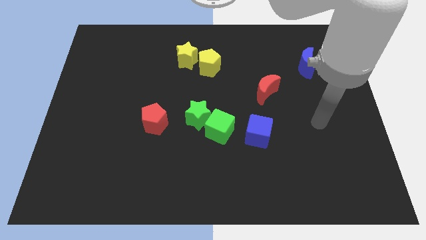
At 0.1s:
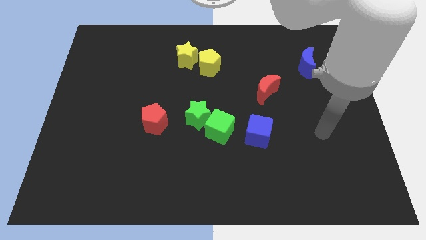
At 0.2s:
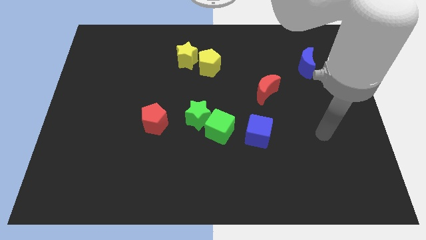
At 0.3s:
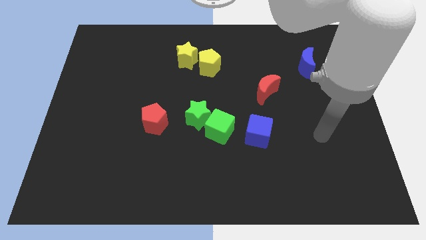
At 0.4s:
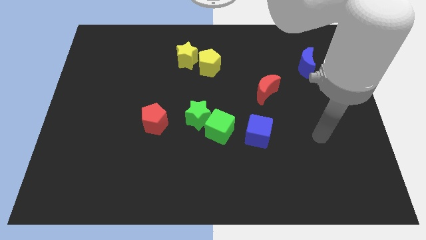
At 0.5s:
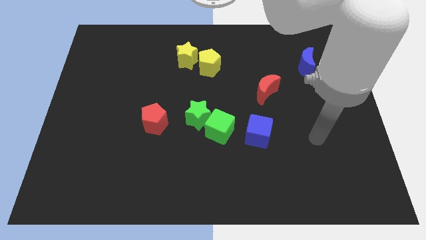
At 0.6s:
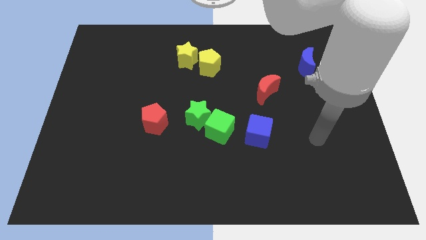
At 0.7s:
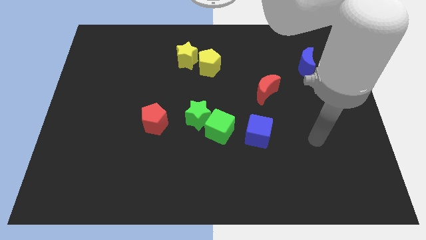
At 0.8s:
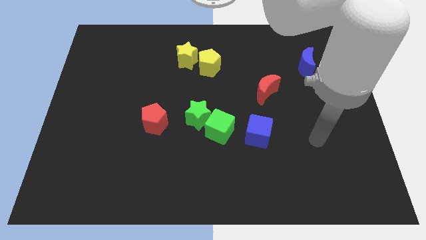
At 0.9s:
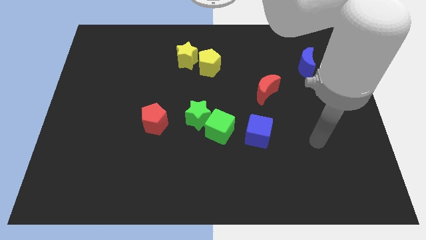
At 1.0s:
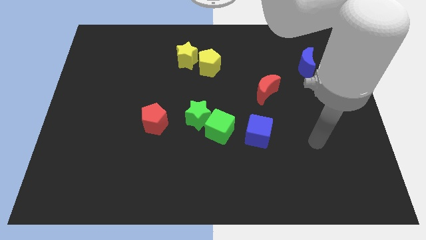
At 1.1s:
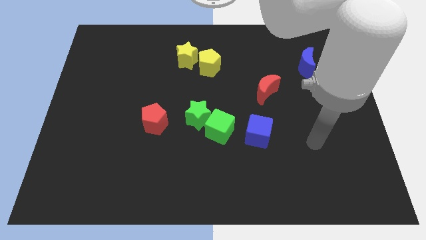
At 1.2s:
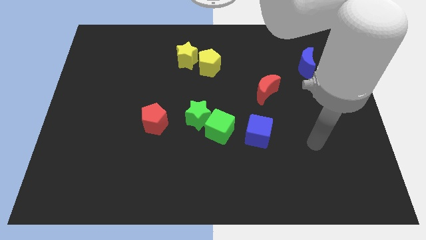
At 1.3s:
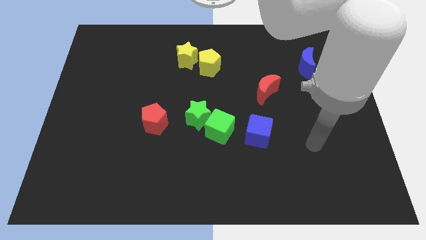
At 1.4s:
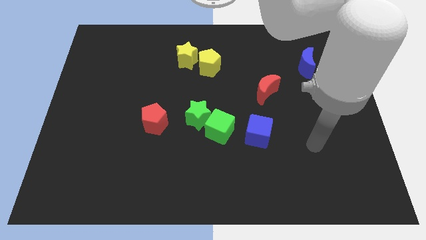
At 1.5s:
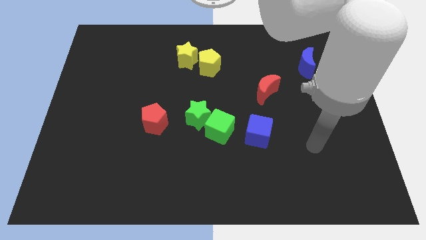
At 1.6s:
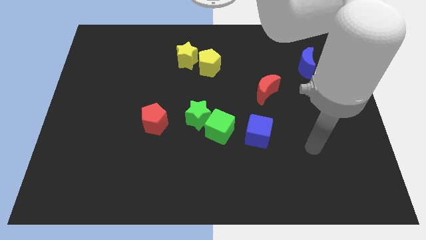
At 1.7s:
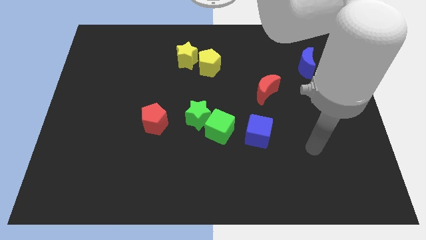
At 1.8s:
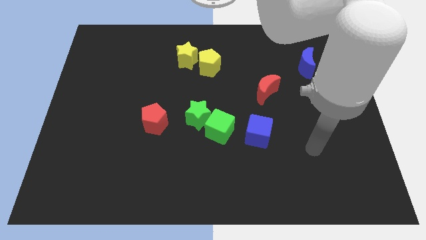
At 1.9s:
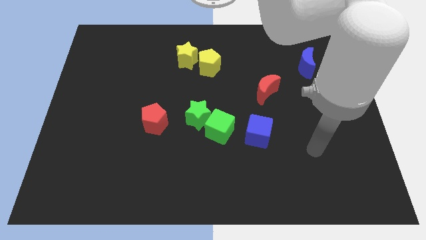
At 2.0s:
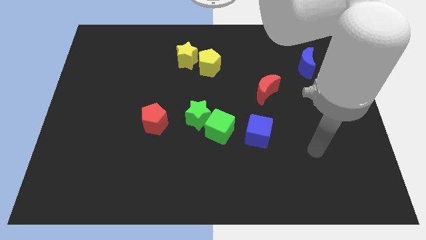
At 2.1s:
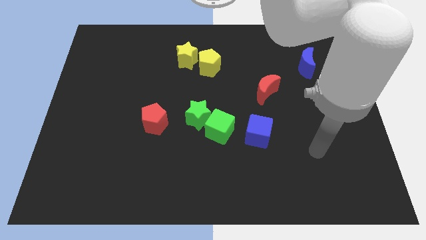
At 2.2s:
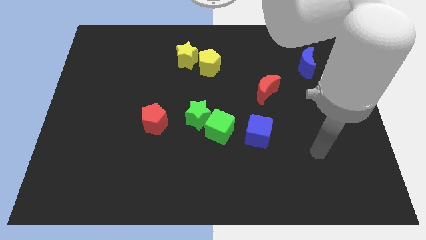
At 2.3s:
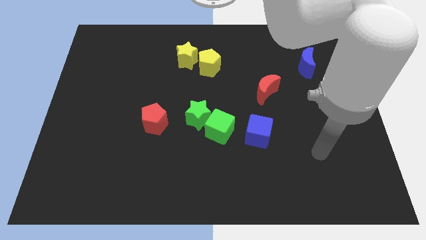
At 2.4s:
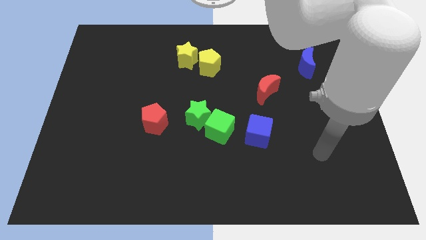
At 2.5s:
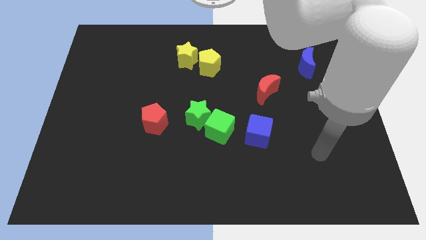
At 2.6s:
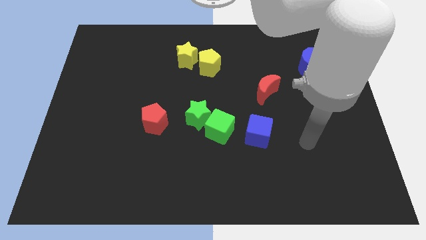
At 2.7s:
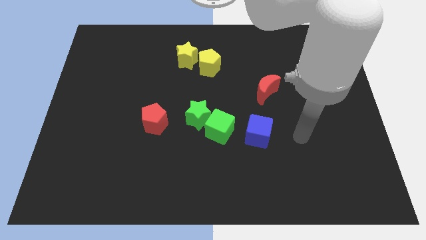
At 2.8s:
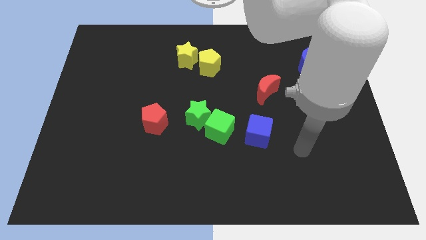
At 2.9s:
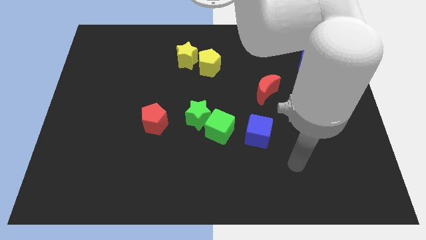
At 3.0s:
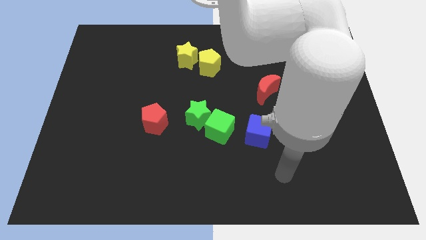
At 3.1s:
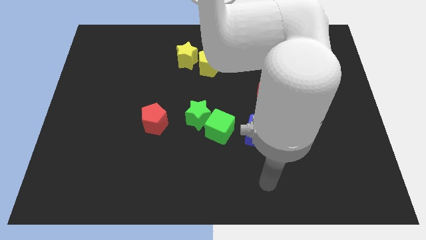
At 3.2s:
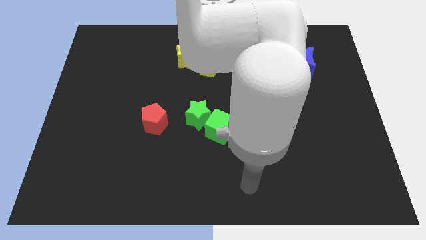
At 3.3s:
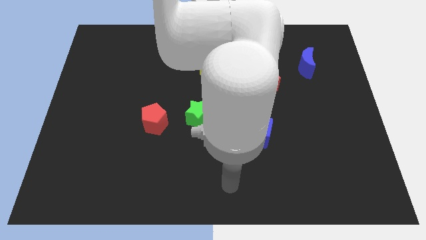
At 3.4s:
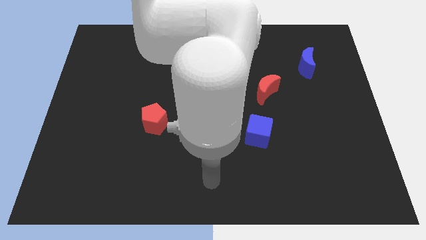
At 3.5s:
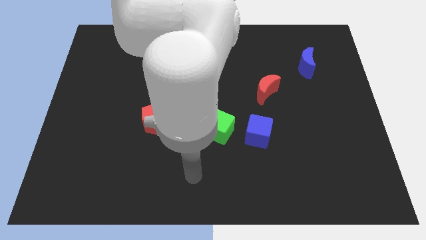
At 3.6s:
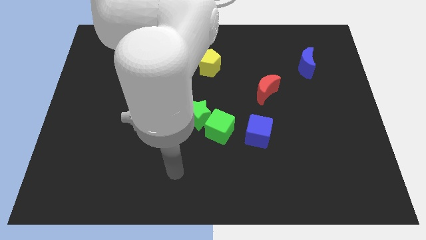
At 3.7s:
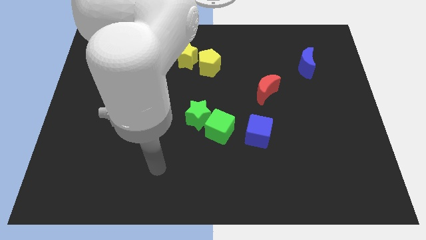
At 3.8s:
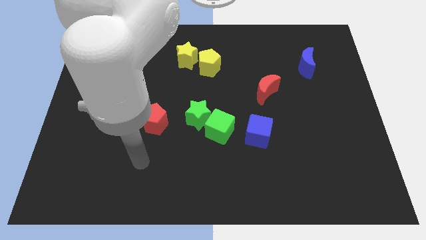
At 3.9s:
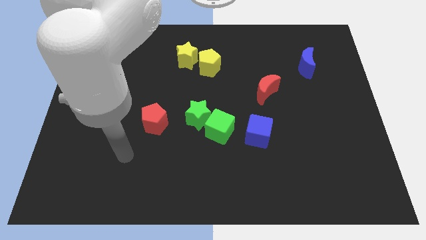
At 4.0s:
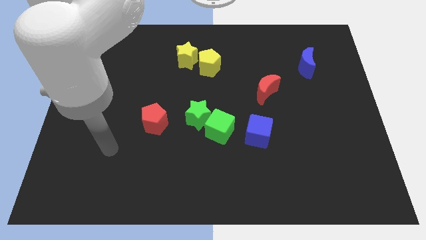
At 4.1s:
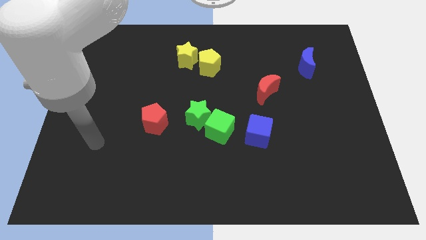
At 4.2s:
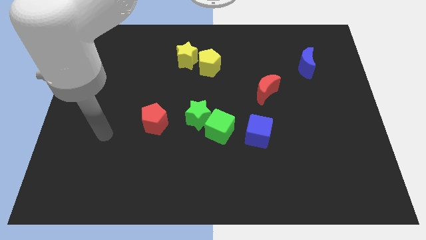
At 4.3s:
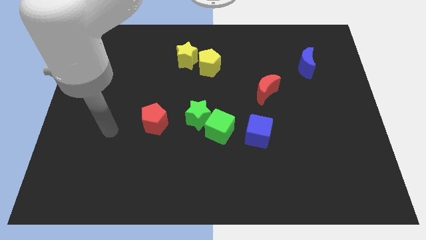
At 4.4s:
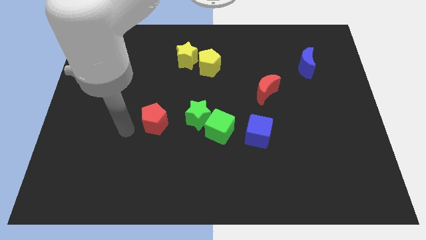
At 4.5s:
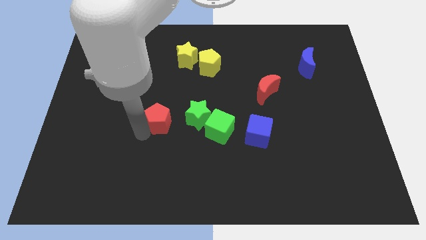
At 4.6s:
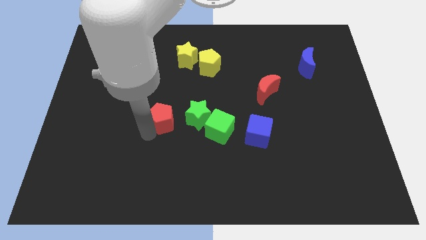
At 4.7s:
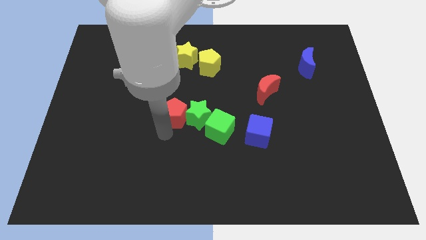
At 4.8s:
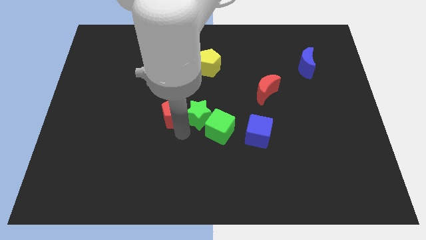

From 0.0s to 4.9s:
place the red pentagon close to the green star

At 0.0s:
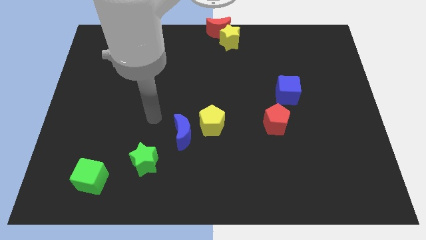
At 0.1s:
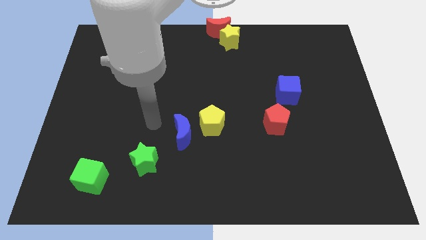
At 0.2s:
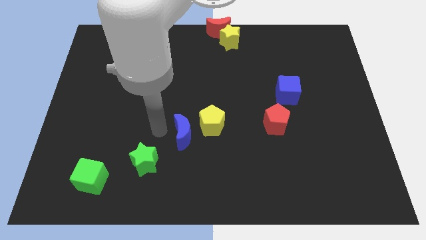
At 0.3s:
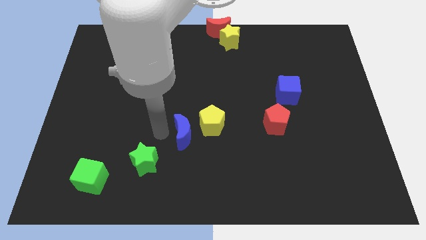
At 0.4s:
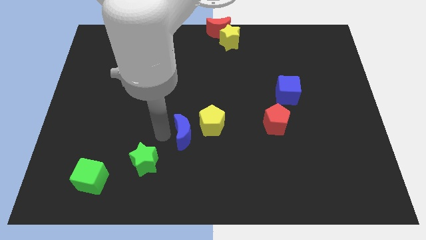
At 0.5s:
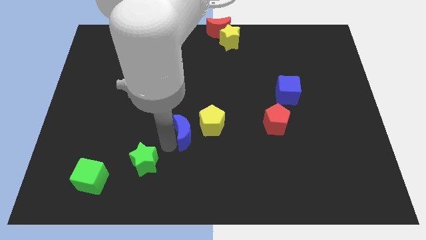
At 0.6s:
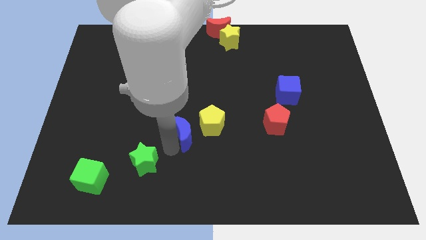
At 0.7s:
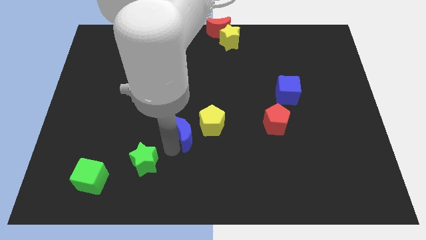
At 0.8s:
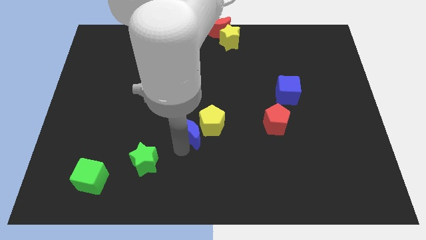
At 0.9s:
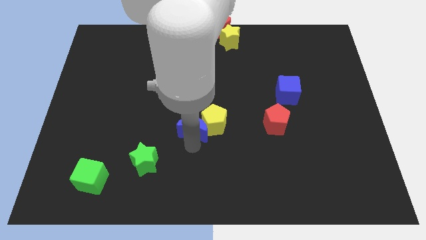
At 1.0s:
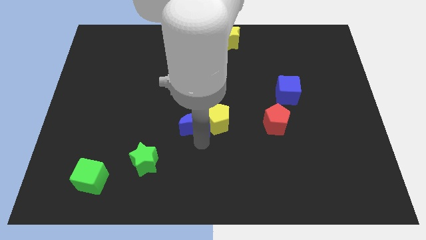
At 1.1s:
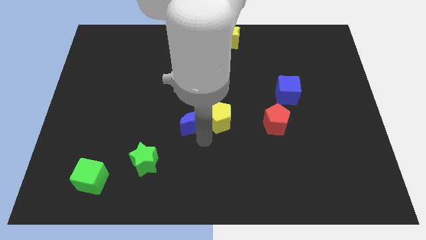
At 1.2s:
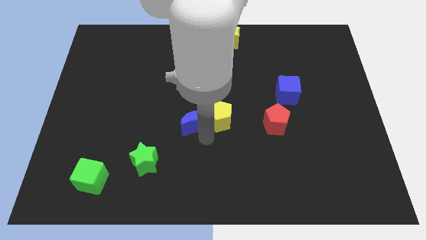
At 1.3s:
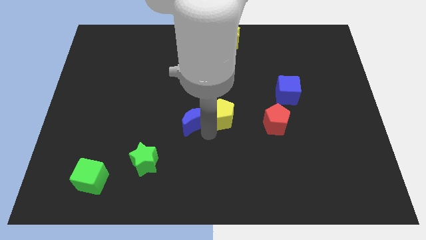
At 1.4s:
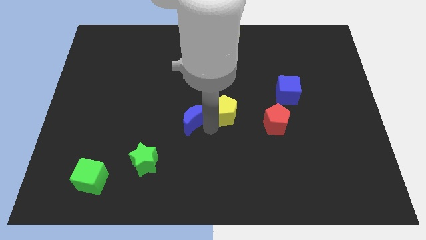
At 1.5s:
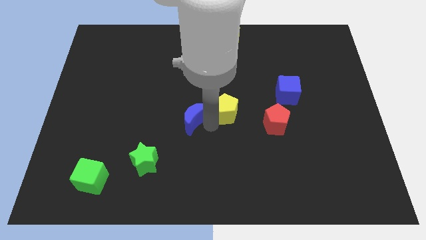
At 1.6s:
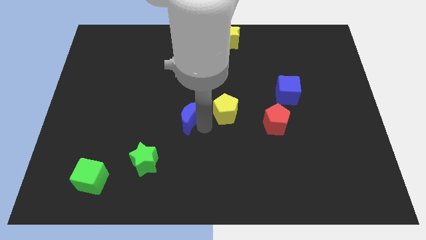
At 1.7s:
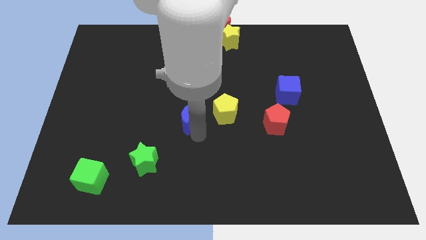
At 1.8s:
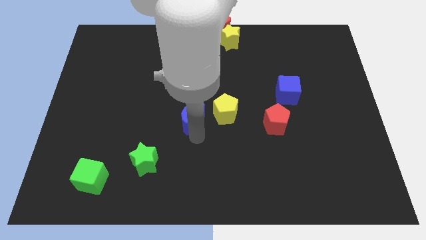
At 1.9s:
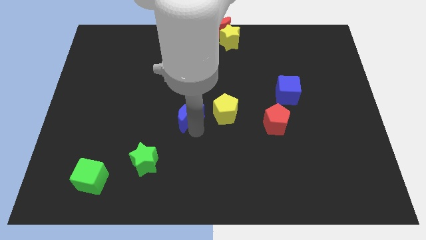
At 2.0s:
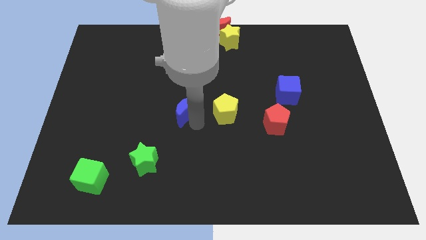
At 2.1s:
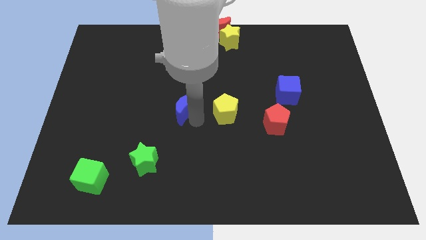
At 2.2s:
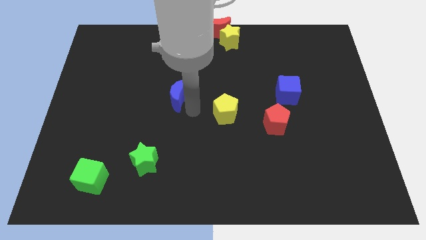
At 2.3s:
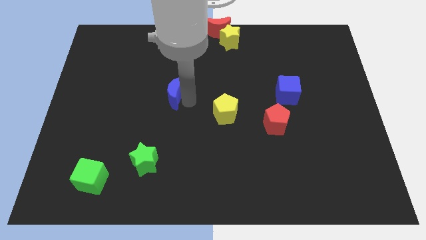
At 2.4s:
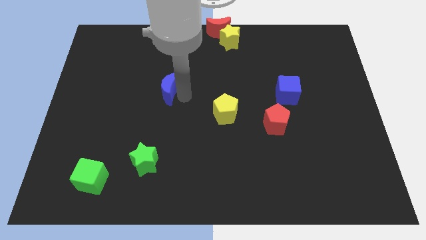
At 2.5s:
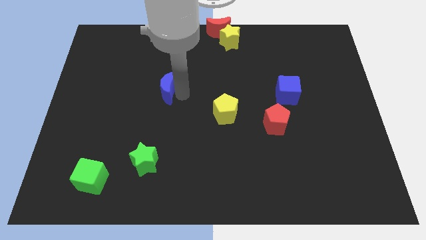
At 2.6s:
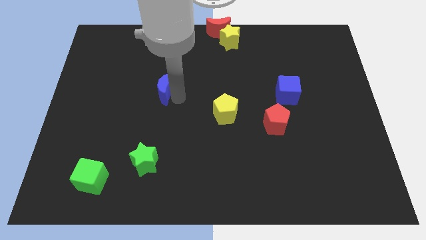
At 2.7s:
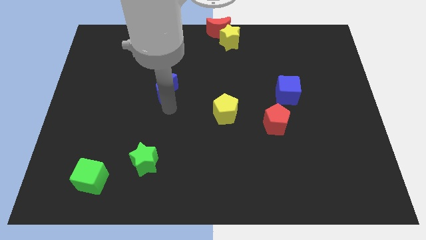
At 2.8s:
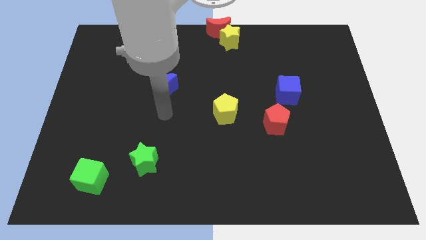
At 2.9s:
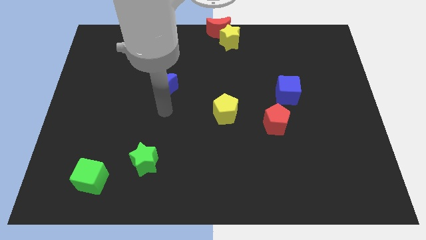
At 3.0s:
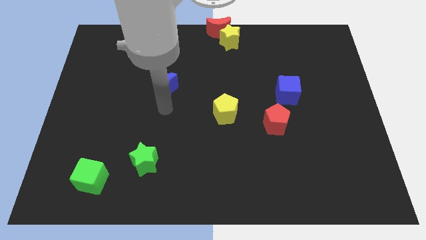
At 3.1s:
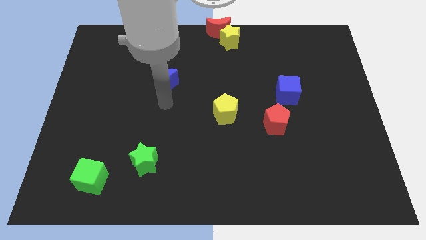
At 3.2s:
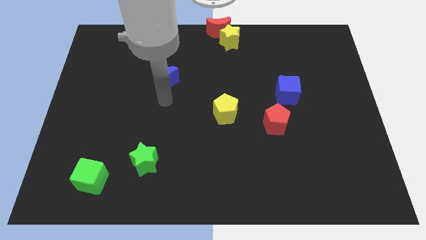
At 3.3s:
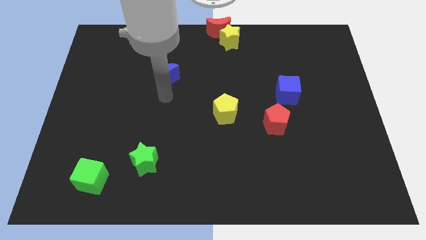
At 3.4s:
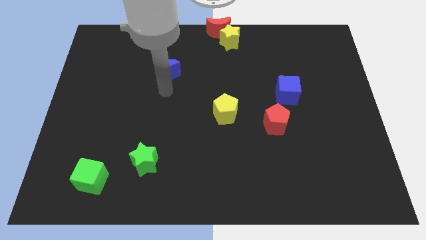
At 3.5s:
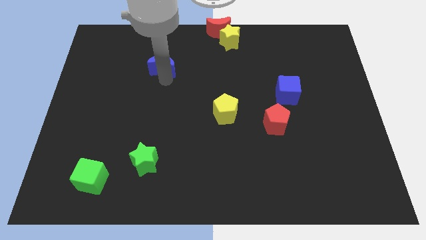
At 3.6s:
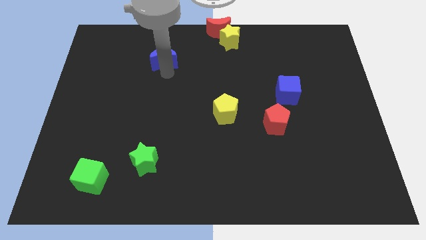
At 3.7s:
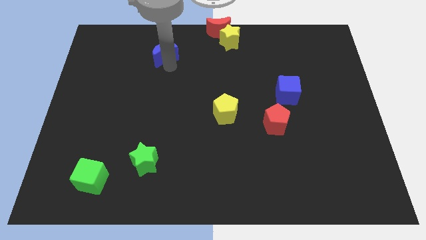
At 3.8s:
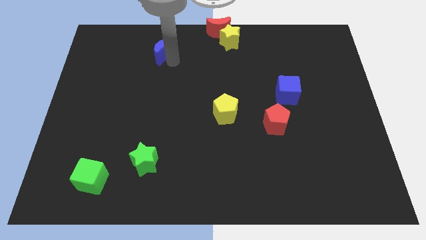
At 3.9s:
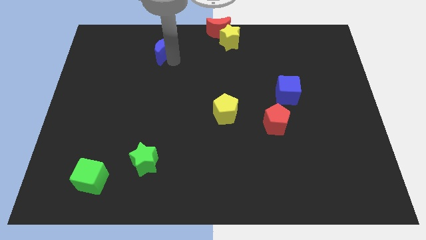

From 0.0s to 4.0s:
place blue moon vertically above green star
